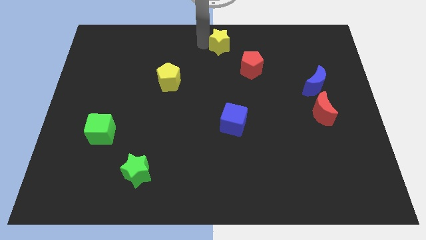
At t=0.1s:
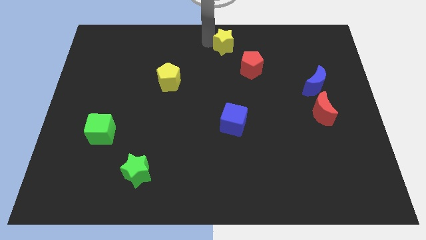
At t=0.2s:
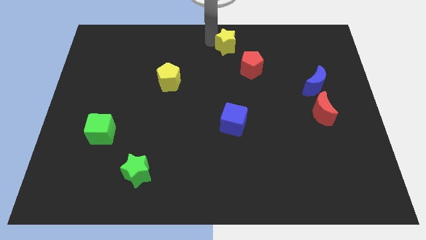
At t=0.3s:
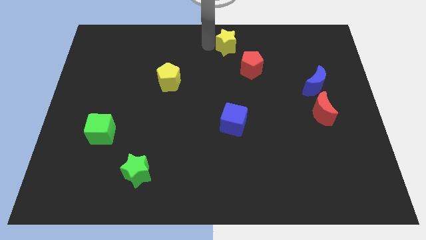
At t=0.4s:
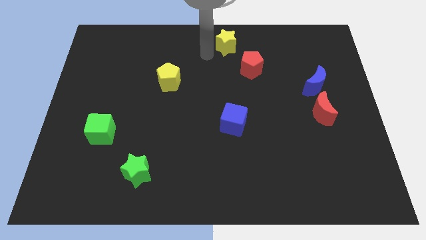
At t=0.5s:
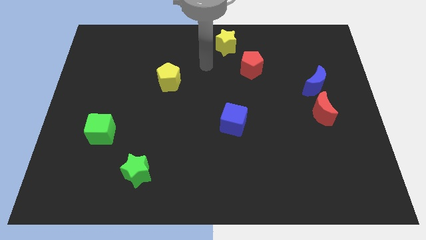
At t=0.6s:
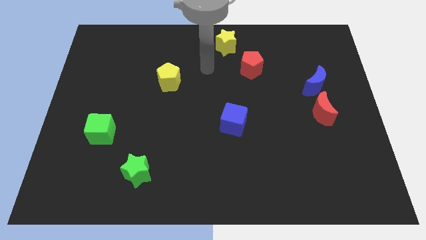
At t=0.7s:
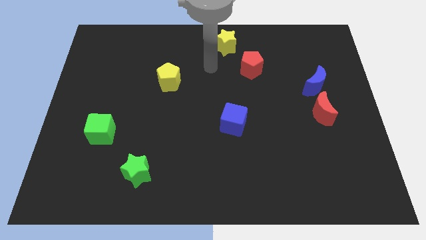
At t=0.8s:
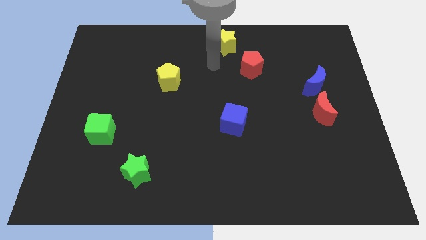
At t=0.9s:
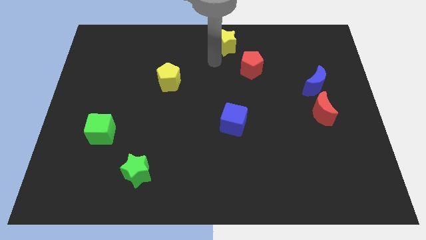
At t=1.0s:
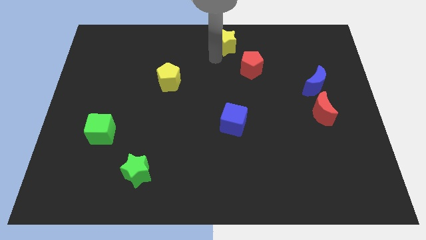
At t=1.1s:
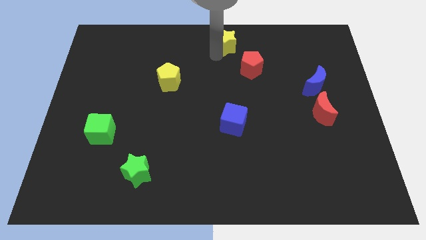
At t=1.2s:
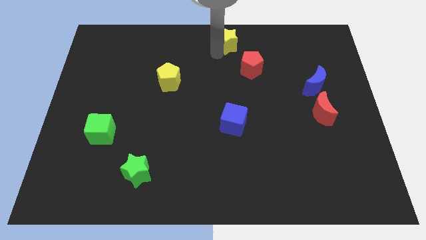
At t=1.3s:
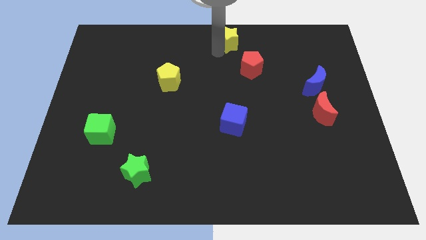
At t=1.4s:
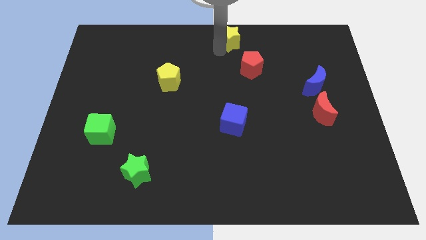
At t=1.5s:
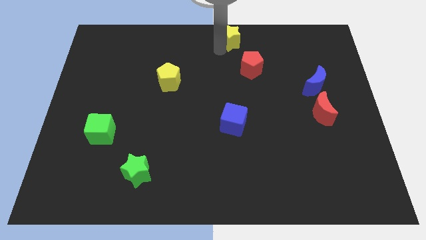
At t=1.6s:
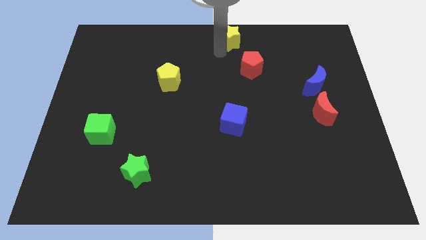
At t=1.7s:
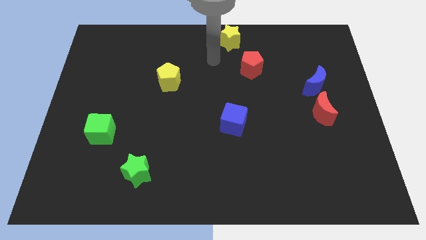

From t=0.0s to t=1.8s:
place the yellow star to the top left of the red pentagon

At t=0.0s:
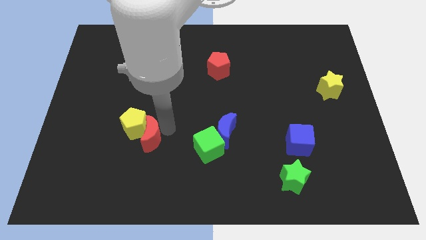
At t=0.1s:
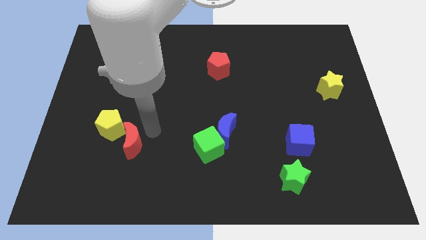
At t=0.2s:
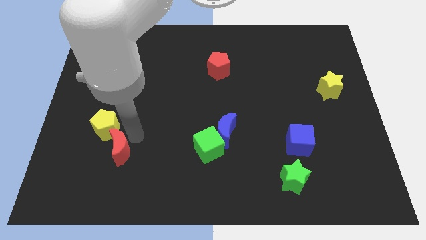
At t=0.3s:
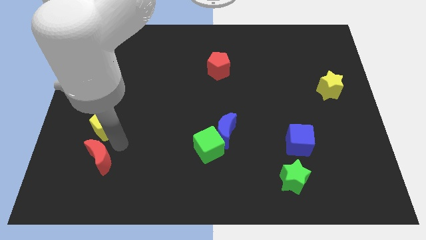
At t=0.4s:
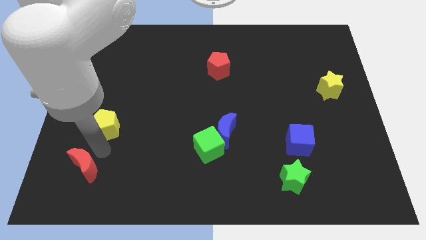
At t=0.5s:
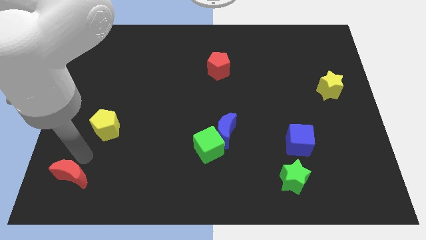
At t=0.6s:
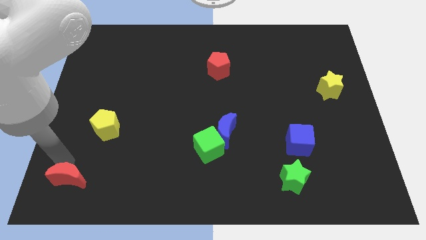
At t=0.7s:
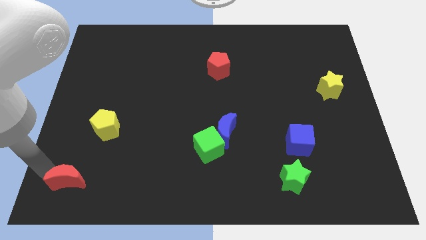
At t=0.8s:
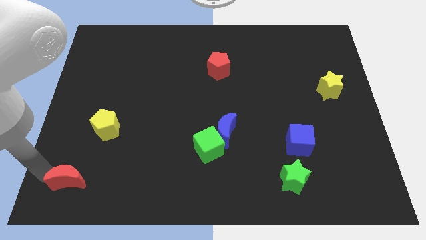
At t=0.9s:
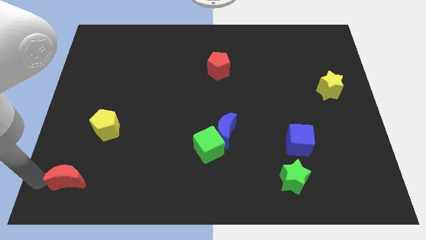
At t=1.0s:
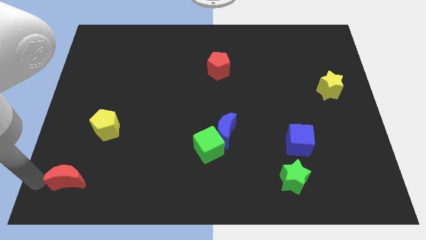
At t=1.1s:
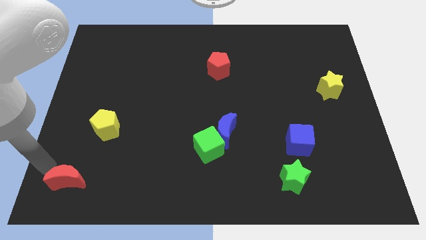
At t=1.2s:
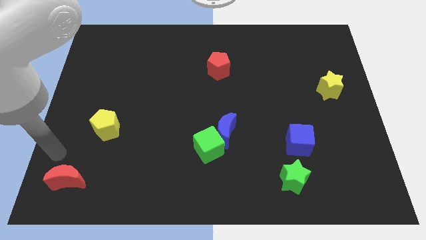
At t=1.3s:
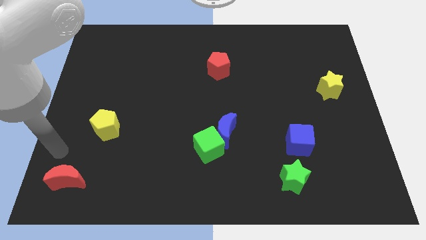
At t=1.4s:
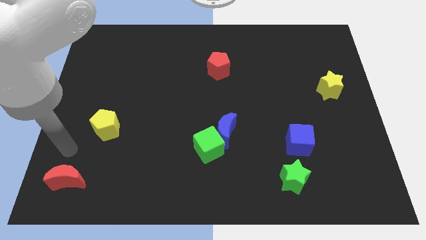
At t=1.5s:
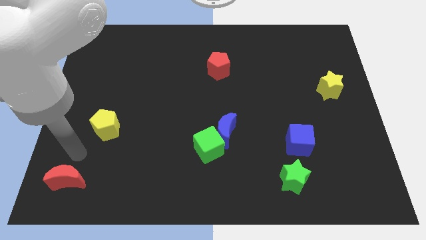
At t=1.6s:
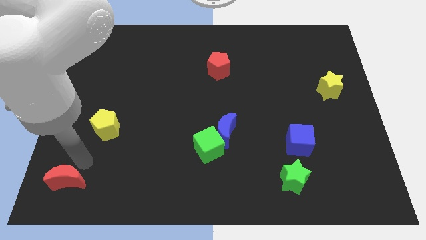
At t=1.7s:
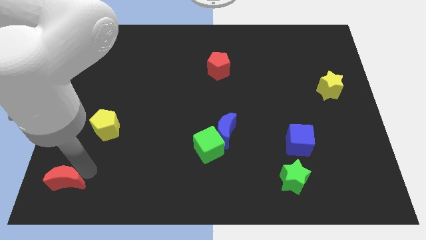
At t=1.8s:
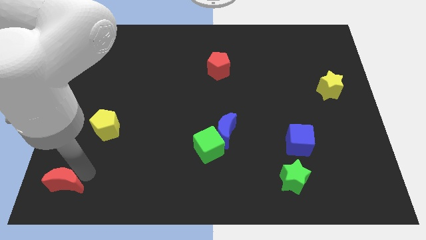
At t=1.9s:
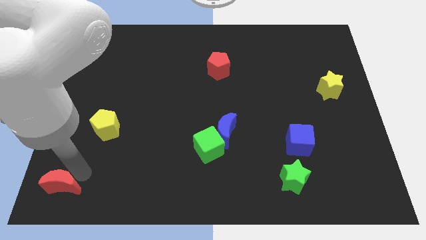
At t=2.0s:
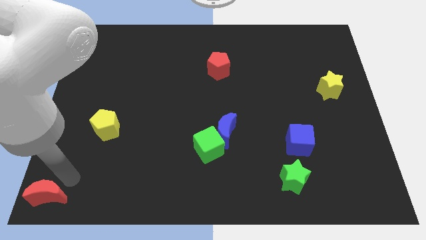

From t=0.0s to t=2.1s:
place the red moon below the yellow pentagon

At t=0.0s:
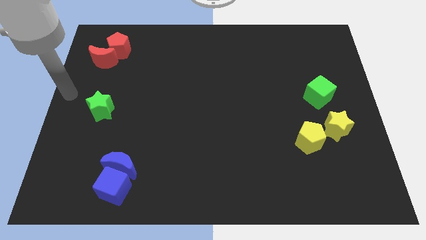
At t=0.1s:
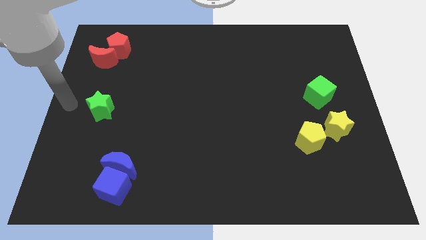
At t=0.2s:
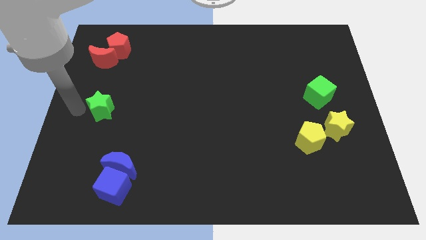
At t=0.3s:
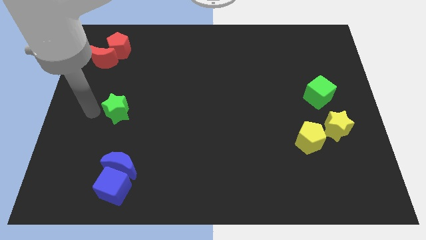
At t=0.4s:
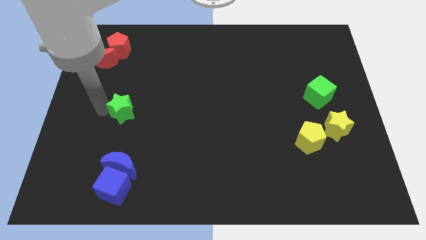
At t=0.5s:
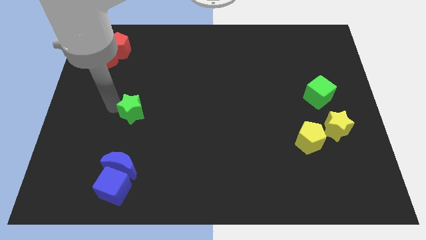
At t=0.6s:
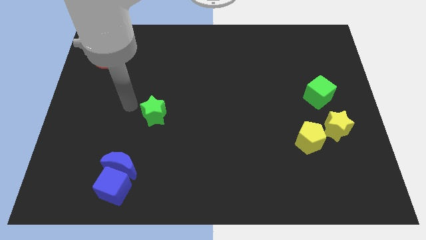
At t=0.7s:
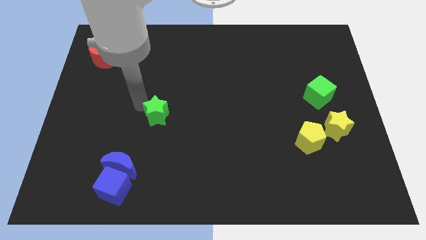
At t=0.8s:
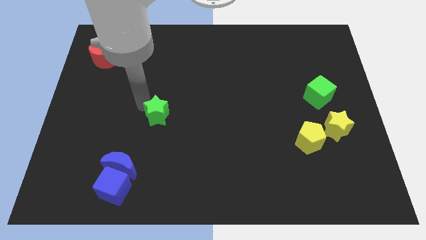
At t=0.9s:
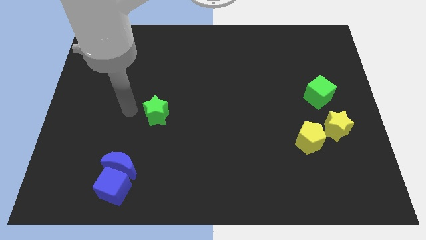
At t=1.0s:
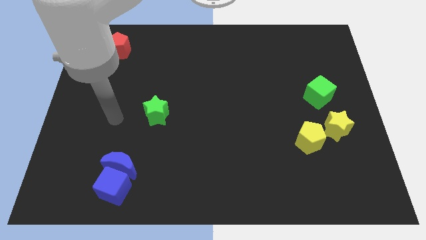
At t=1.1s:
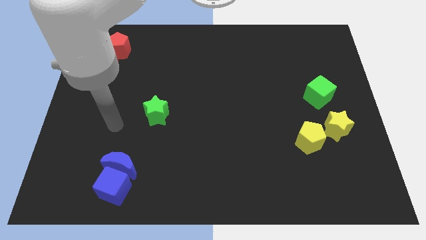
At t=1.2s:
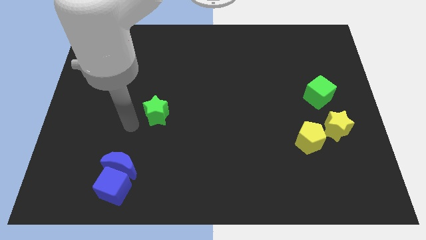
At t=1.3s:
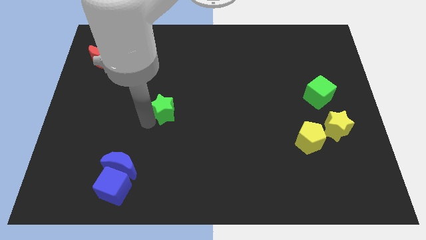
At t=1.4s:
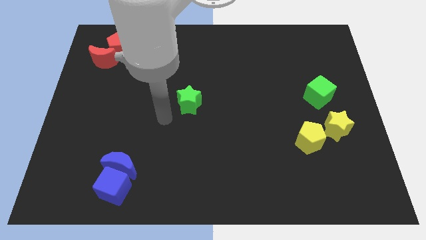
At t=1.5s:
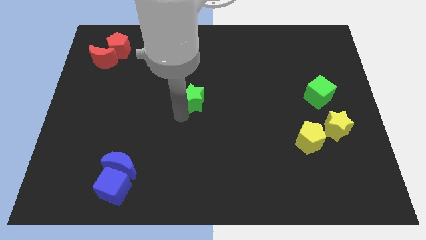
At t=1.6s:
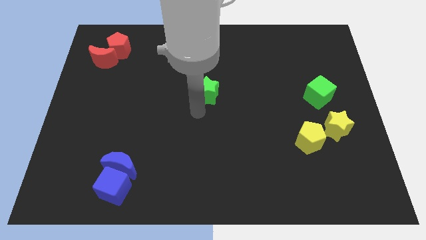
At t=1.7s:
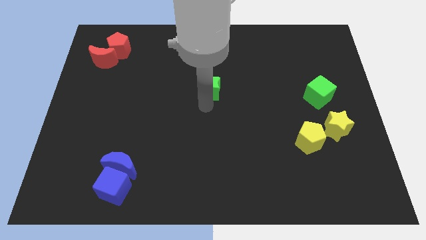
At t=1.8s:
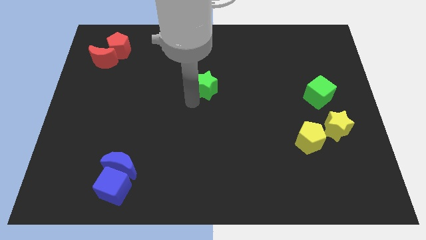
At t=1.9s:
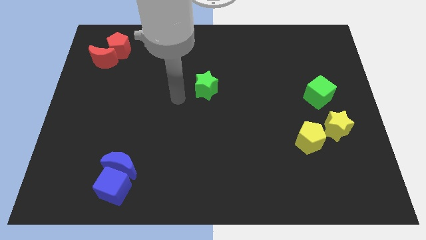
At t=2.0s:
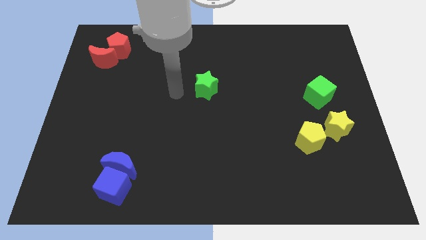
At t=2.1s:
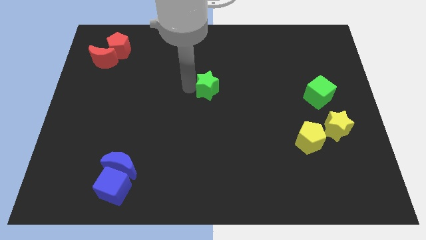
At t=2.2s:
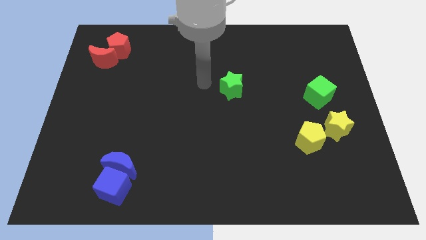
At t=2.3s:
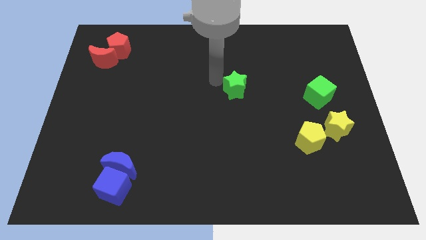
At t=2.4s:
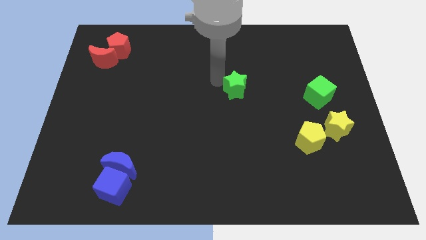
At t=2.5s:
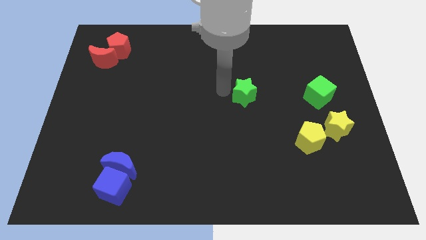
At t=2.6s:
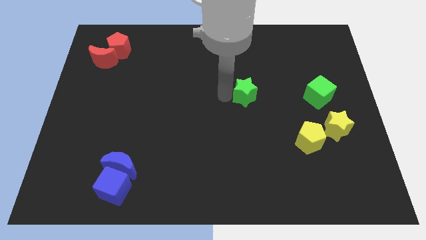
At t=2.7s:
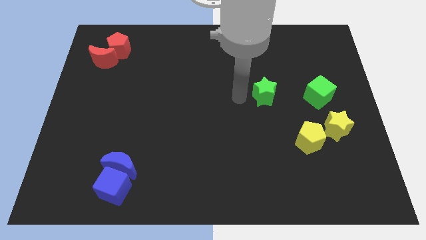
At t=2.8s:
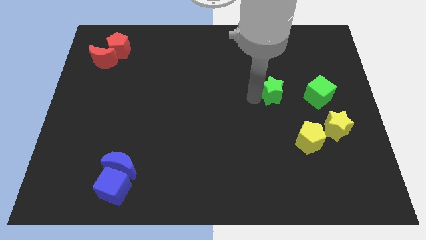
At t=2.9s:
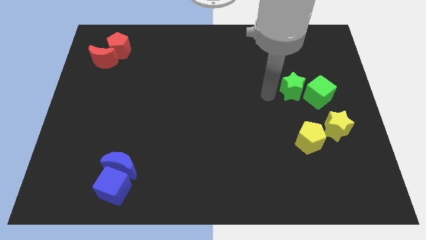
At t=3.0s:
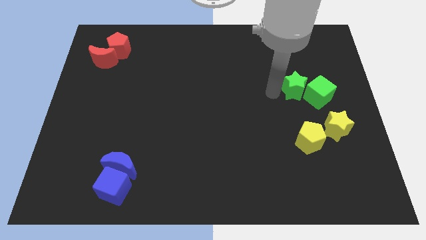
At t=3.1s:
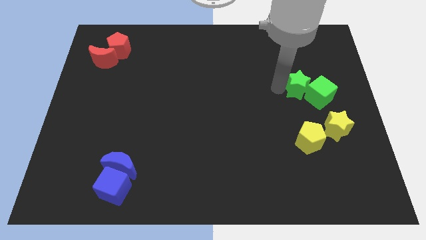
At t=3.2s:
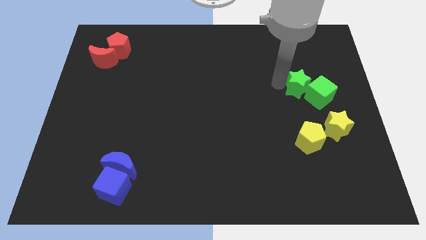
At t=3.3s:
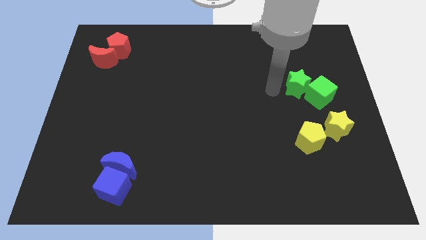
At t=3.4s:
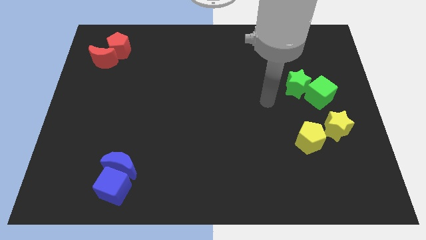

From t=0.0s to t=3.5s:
slide the green star to the top left side of the green cube

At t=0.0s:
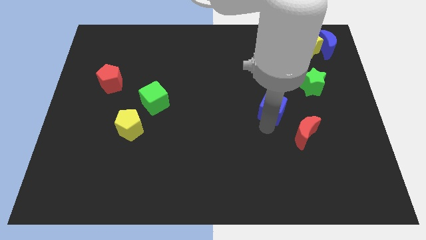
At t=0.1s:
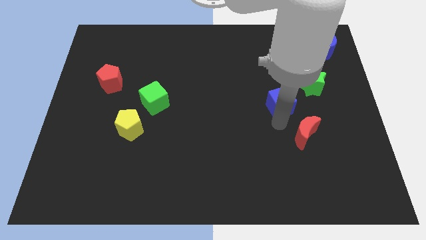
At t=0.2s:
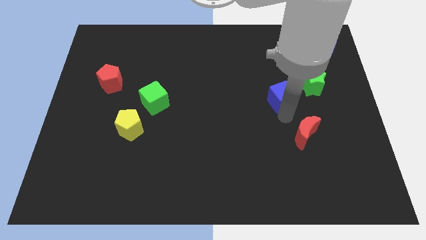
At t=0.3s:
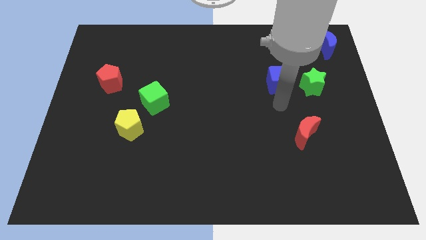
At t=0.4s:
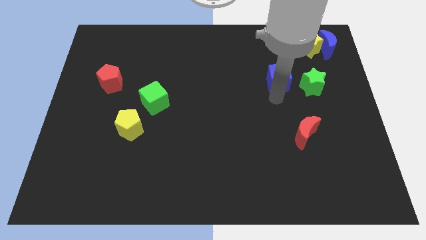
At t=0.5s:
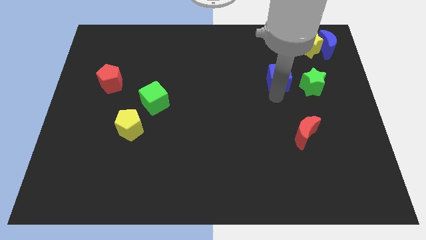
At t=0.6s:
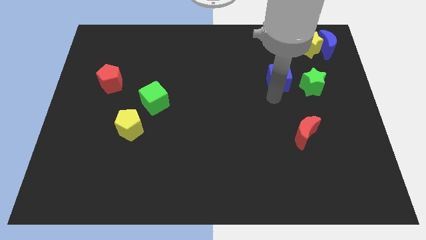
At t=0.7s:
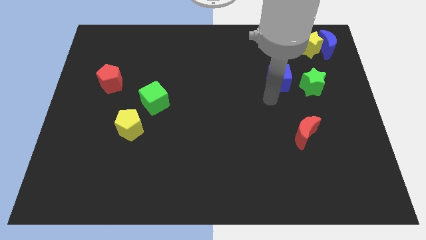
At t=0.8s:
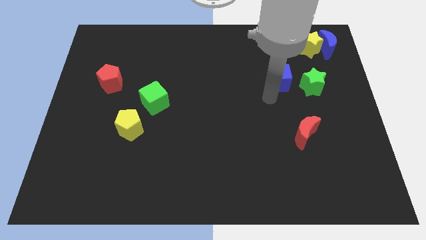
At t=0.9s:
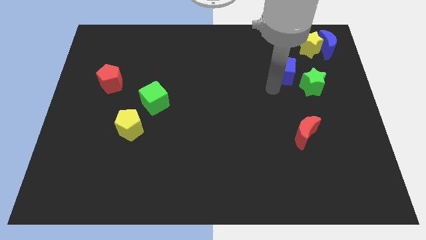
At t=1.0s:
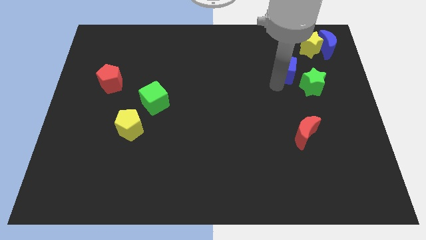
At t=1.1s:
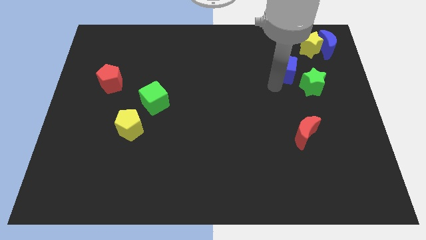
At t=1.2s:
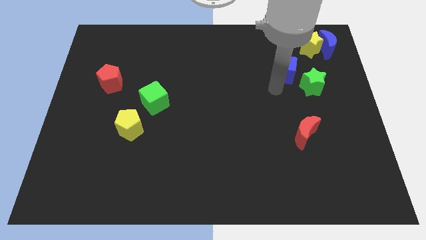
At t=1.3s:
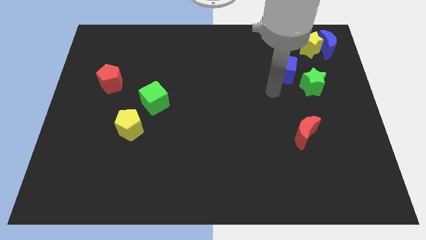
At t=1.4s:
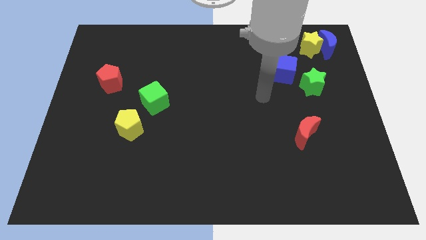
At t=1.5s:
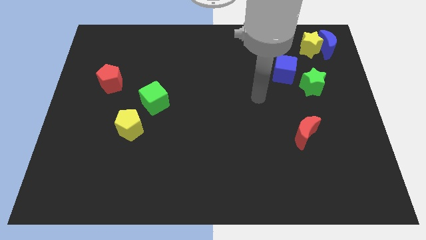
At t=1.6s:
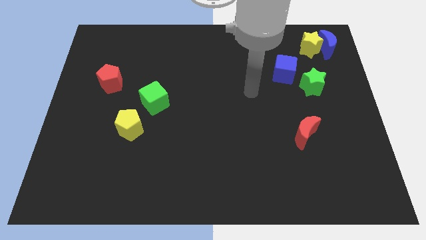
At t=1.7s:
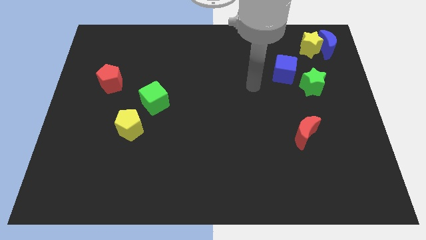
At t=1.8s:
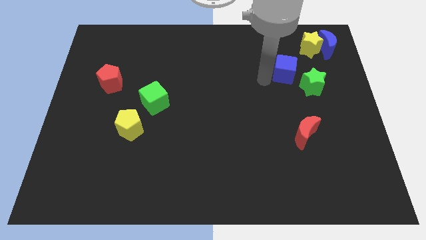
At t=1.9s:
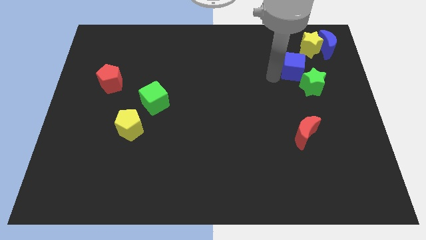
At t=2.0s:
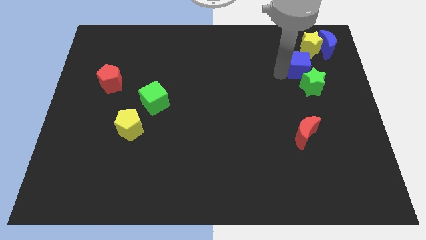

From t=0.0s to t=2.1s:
slide blue cube diagonally top left to the green star
